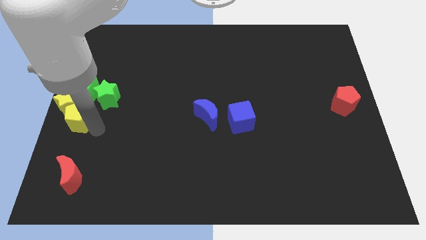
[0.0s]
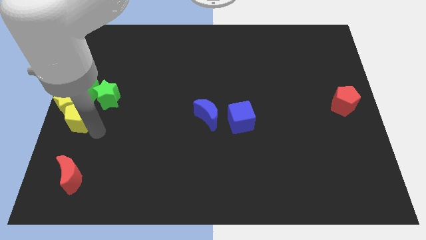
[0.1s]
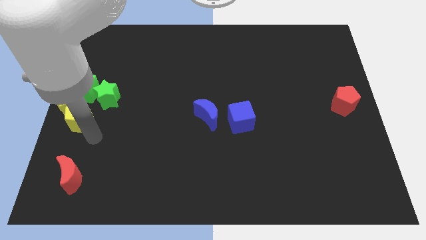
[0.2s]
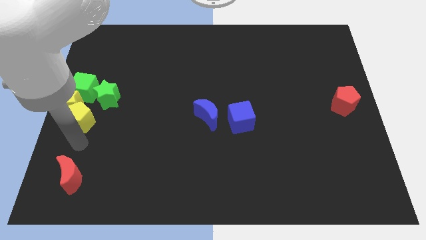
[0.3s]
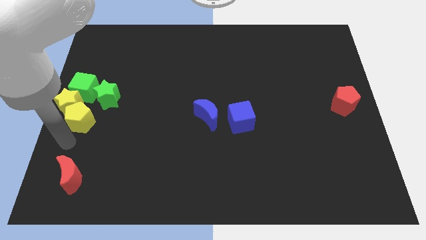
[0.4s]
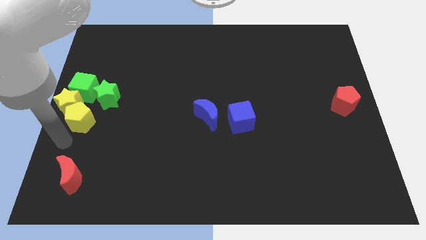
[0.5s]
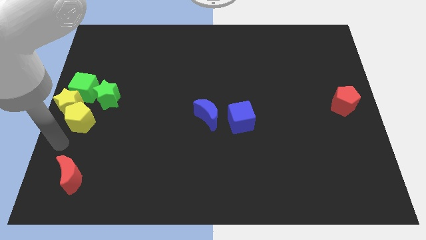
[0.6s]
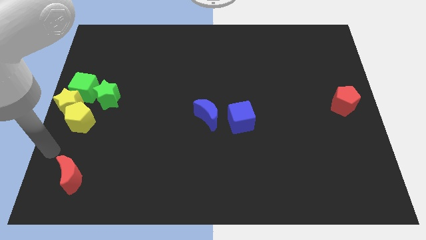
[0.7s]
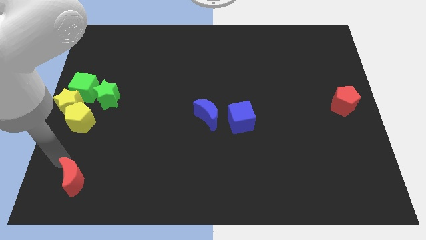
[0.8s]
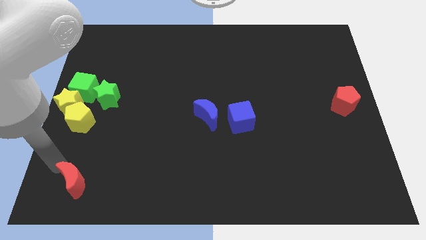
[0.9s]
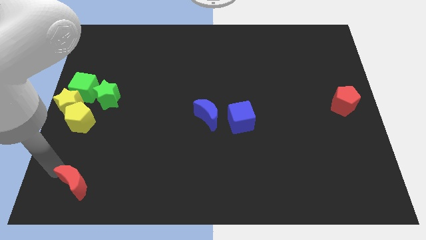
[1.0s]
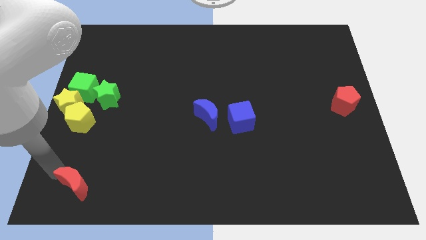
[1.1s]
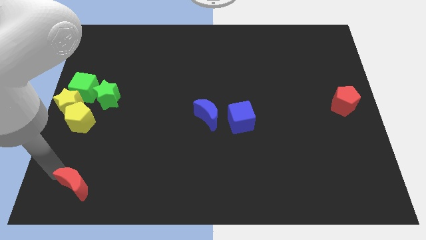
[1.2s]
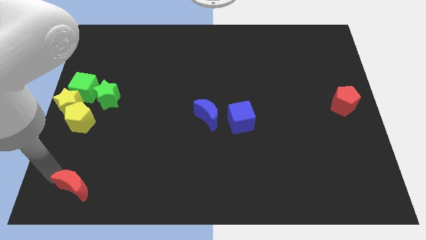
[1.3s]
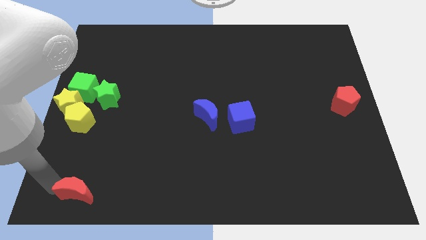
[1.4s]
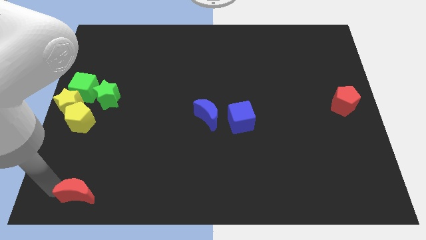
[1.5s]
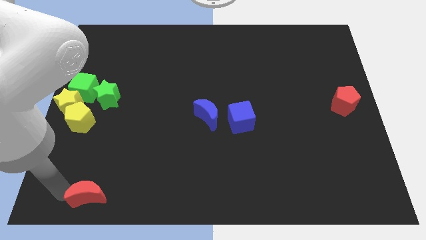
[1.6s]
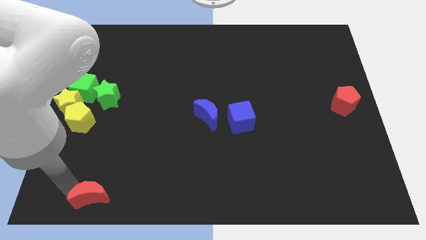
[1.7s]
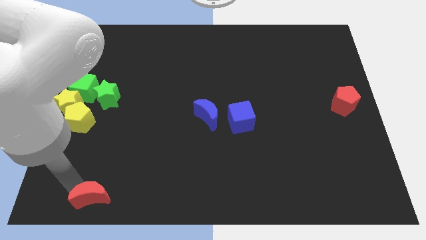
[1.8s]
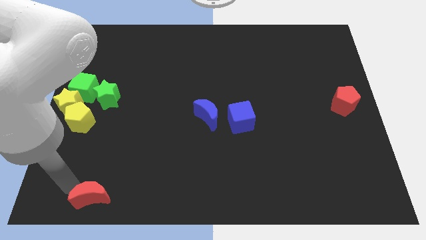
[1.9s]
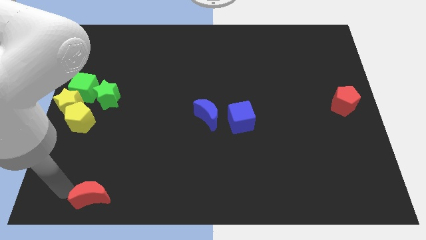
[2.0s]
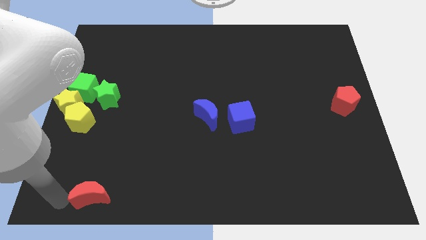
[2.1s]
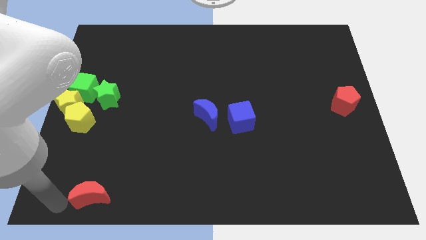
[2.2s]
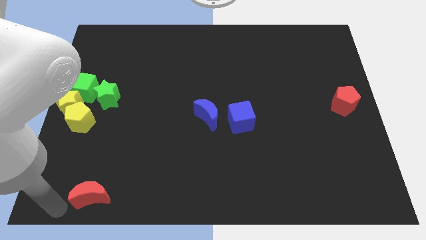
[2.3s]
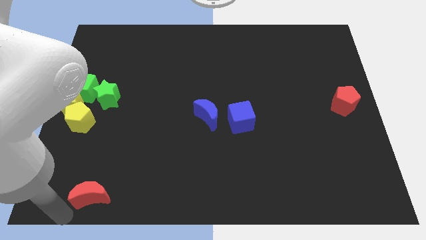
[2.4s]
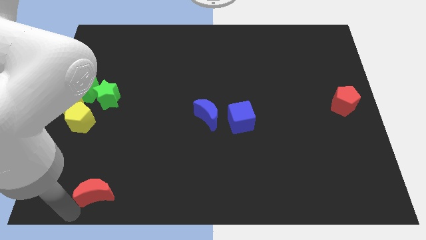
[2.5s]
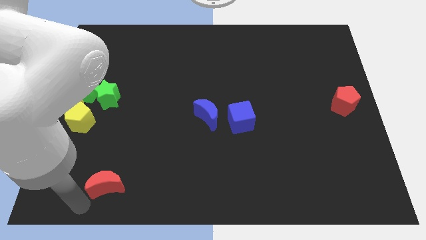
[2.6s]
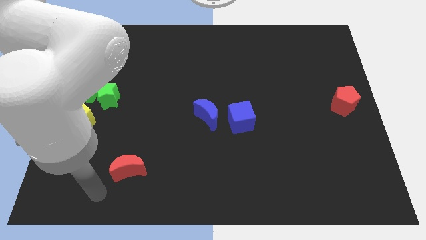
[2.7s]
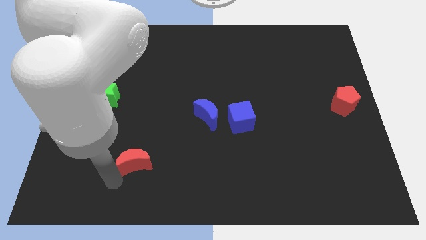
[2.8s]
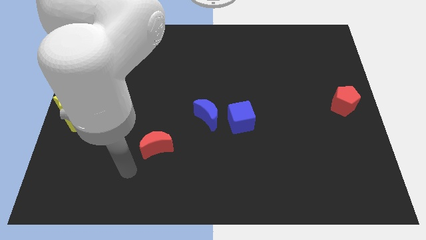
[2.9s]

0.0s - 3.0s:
move the red moon towards the top side of the board

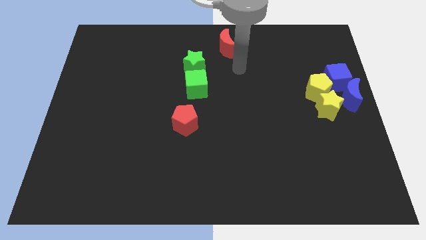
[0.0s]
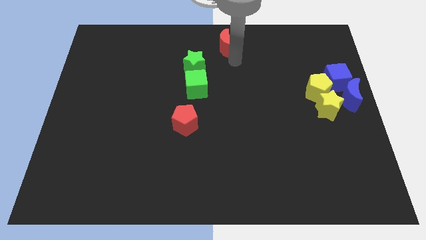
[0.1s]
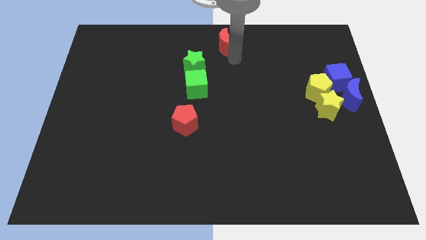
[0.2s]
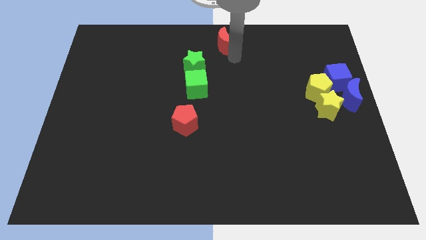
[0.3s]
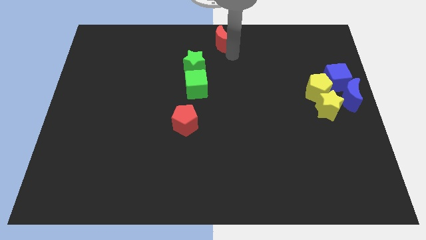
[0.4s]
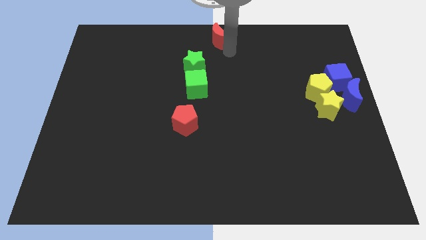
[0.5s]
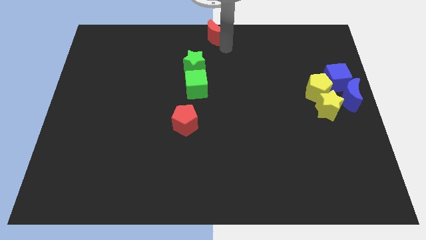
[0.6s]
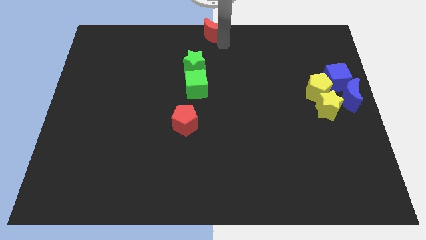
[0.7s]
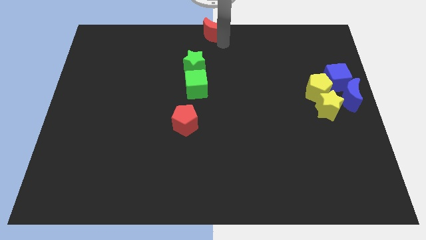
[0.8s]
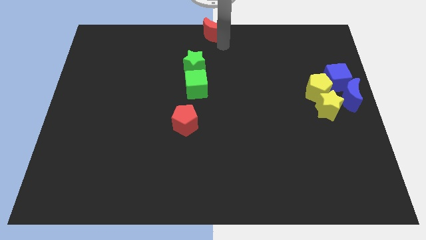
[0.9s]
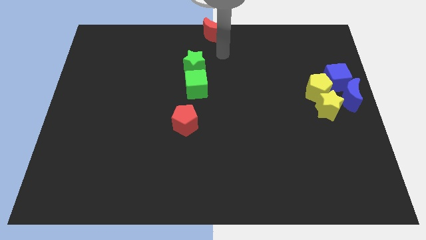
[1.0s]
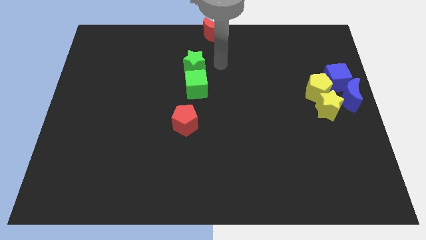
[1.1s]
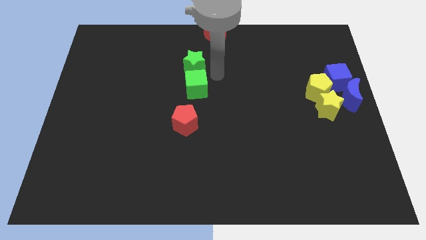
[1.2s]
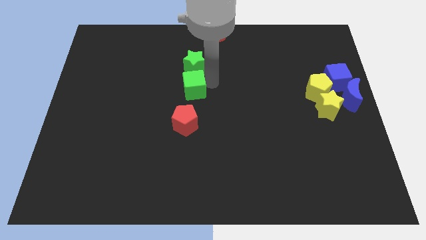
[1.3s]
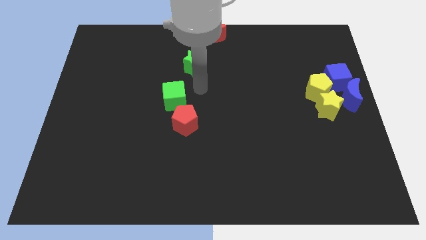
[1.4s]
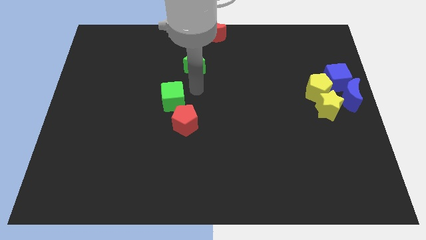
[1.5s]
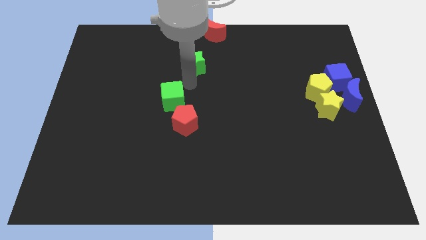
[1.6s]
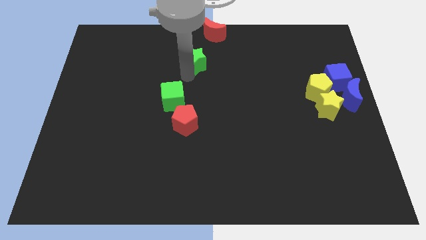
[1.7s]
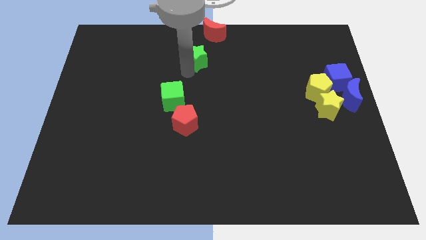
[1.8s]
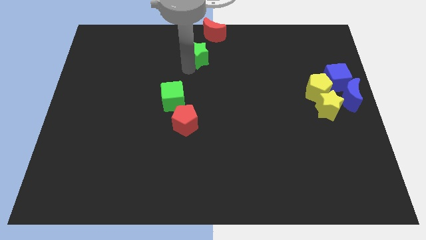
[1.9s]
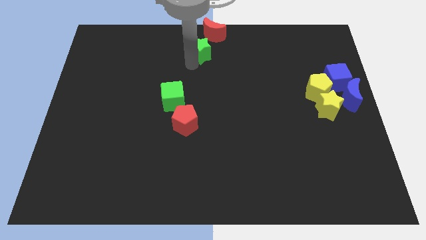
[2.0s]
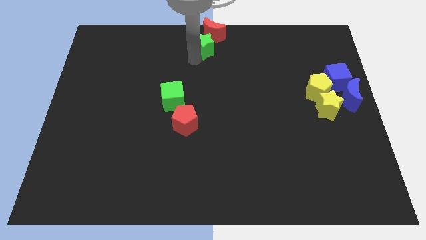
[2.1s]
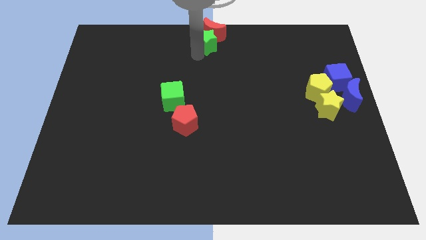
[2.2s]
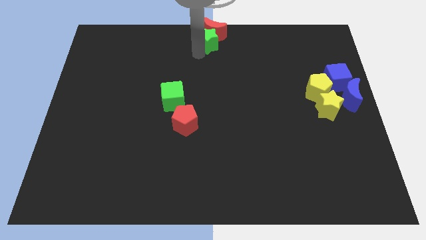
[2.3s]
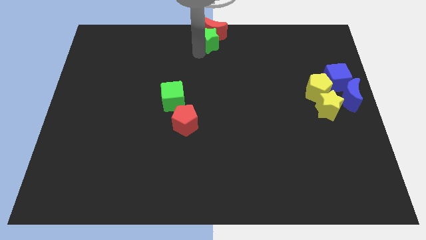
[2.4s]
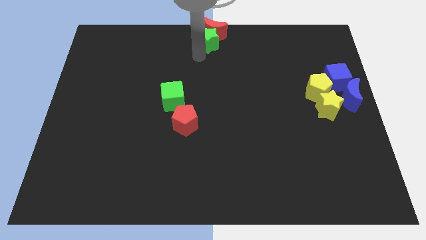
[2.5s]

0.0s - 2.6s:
push green star towards red crescent

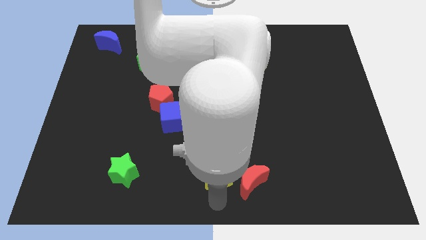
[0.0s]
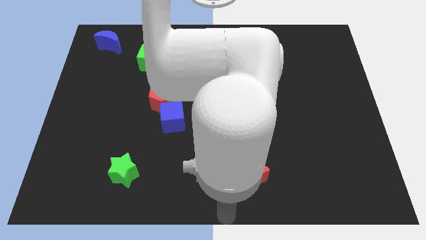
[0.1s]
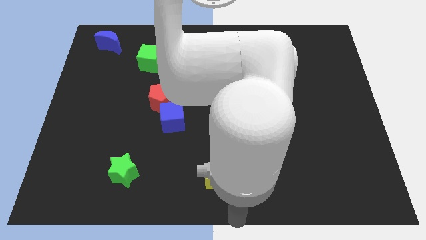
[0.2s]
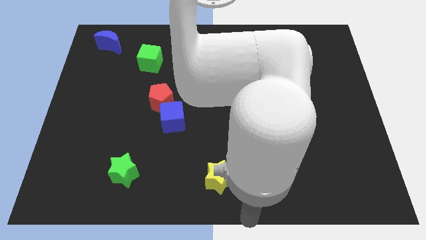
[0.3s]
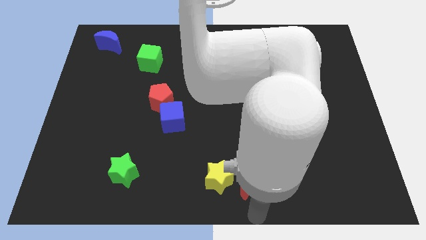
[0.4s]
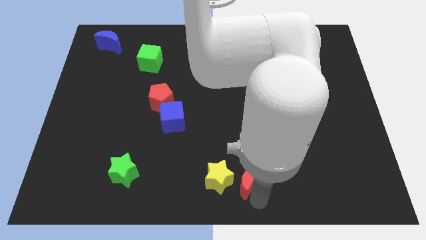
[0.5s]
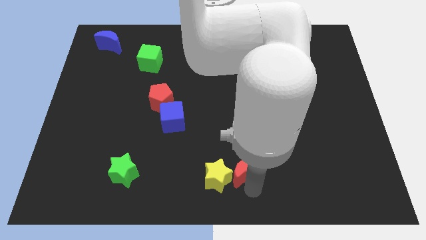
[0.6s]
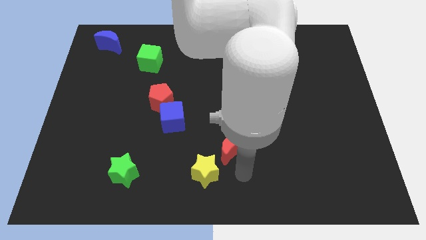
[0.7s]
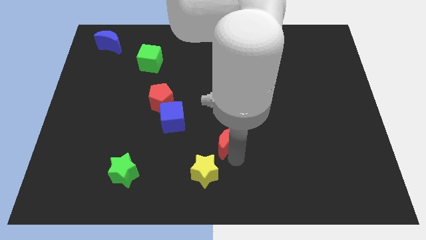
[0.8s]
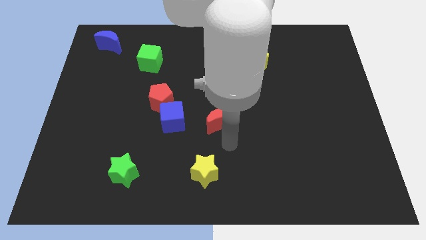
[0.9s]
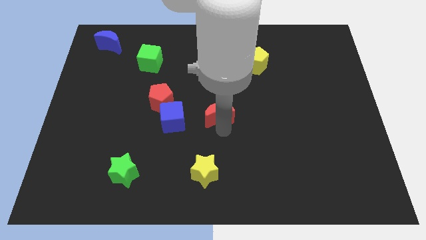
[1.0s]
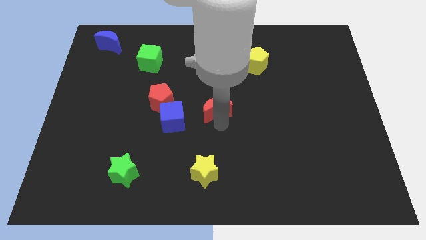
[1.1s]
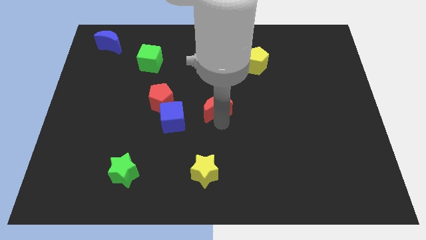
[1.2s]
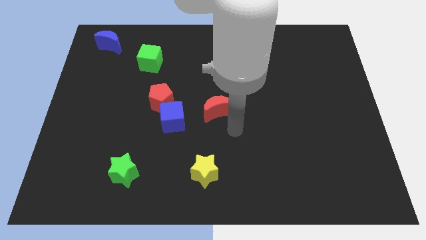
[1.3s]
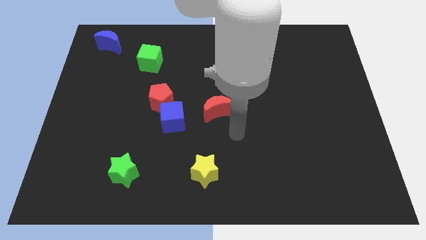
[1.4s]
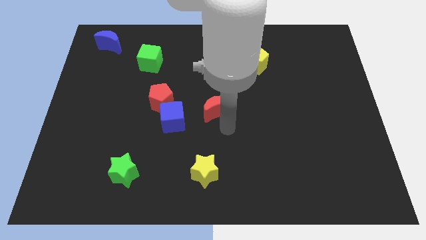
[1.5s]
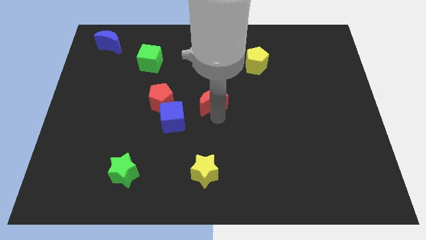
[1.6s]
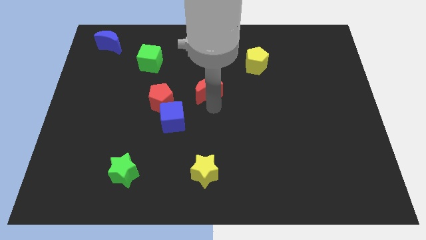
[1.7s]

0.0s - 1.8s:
put the red moon right to the red pentagon

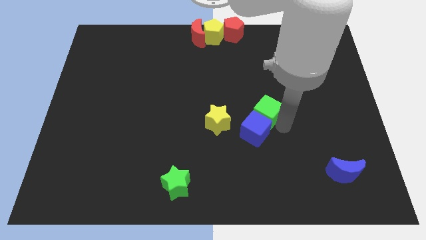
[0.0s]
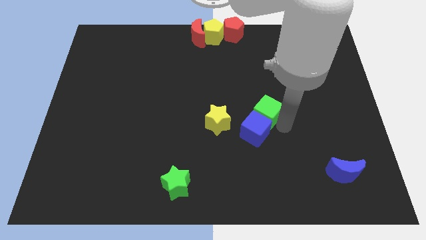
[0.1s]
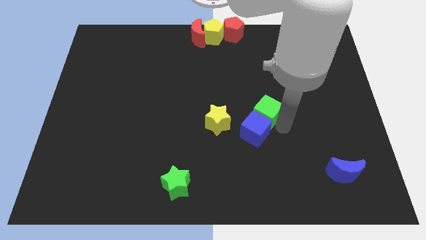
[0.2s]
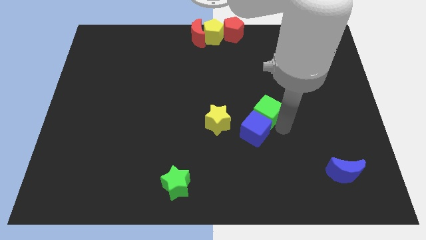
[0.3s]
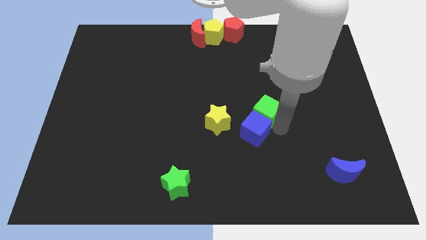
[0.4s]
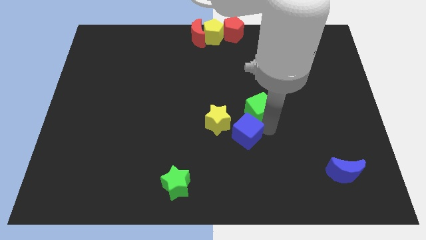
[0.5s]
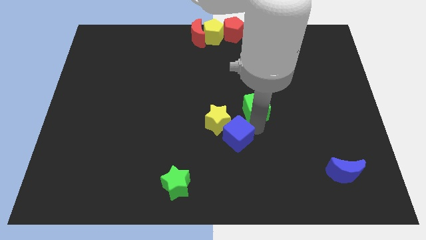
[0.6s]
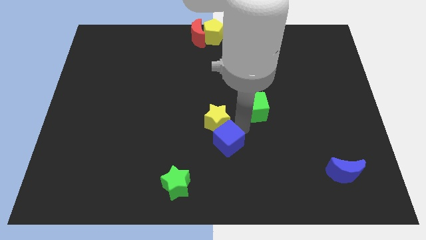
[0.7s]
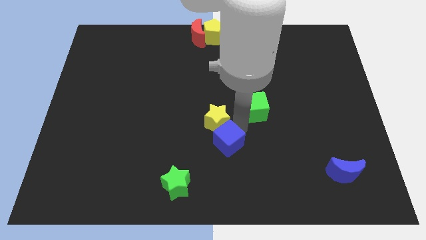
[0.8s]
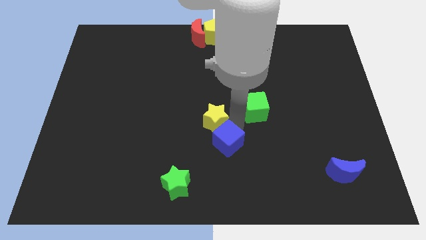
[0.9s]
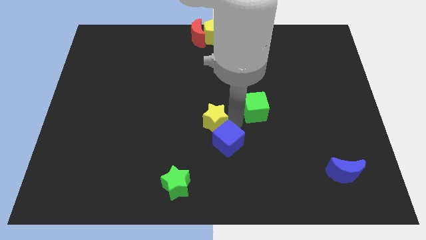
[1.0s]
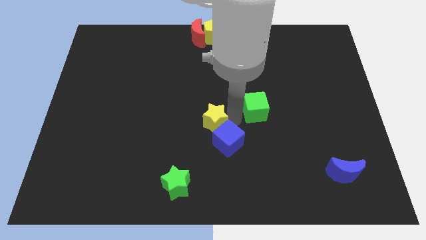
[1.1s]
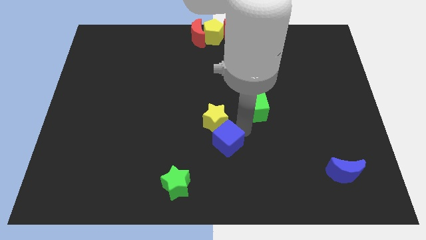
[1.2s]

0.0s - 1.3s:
push the blue cube into the yellow star

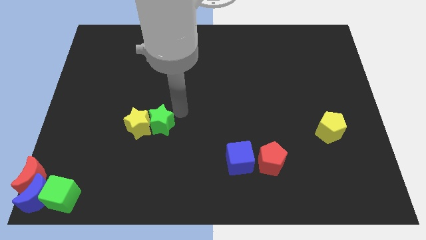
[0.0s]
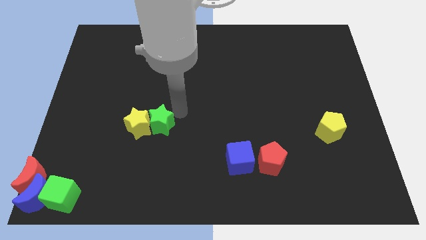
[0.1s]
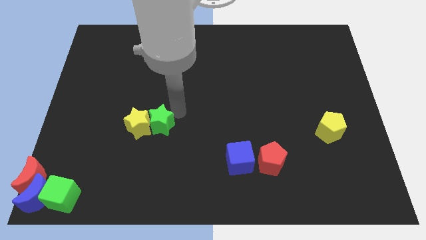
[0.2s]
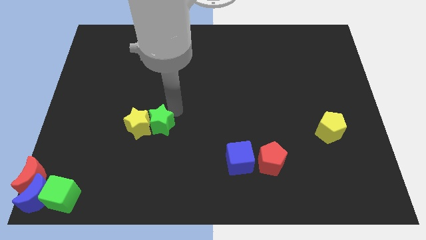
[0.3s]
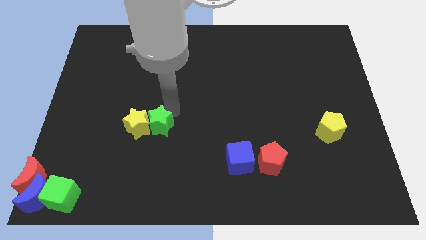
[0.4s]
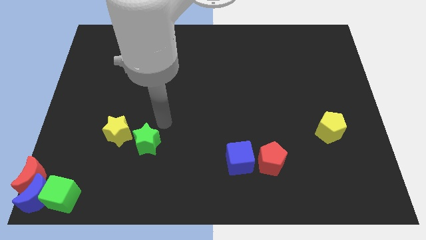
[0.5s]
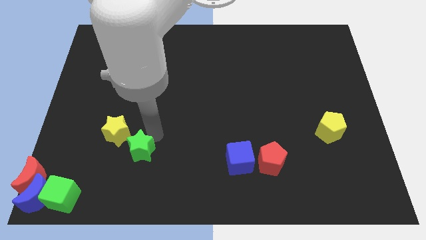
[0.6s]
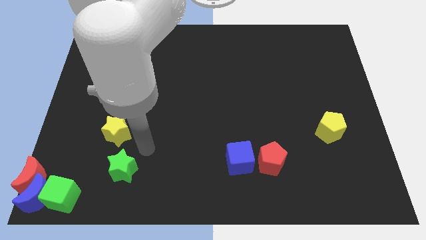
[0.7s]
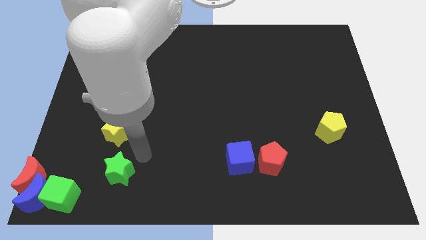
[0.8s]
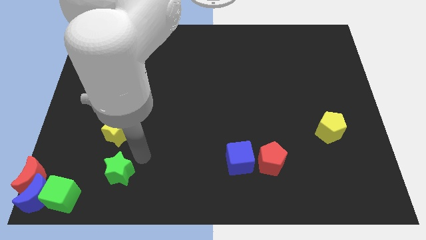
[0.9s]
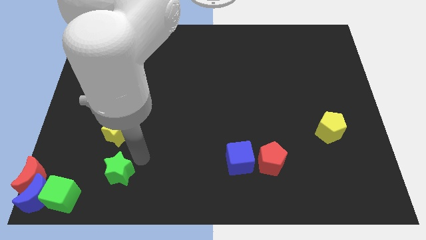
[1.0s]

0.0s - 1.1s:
separate the green star from yellow star
